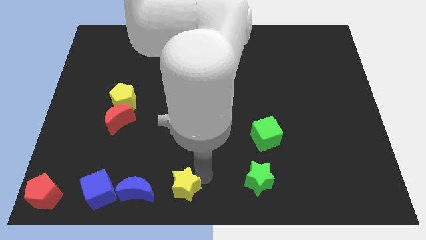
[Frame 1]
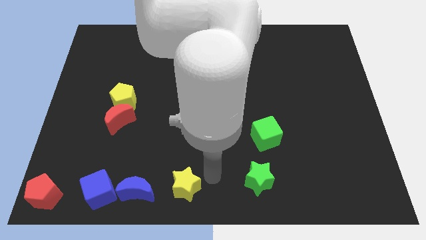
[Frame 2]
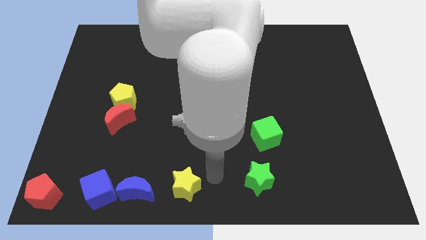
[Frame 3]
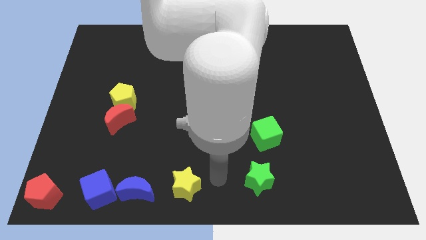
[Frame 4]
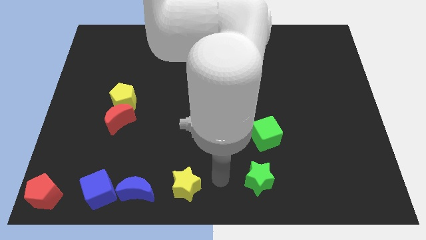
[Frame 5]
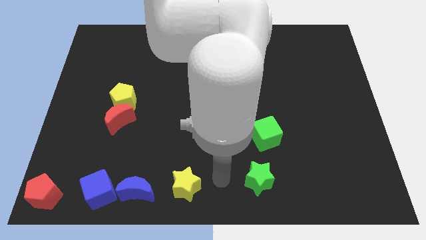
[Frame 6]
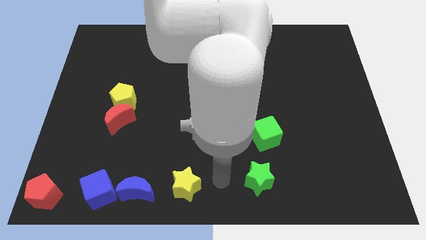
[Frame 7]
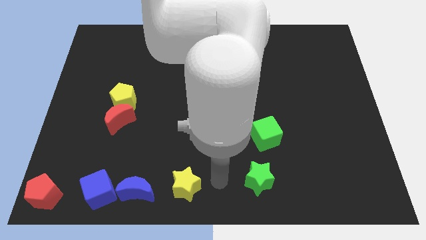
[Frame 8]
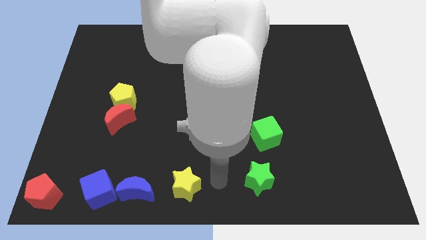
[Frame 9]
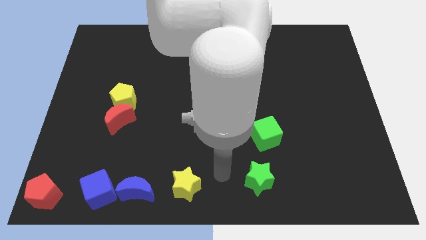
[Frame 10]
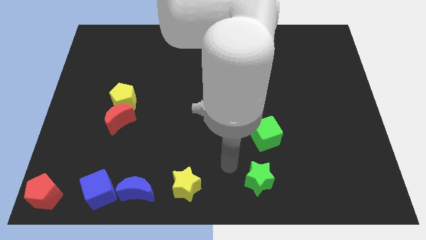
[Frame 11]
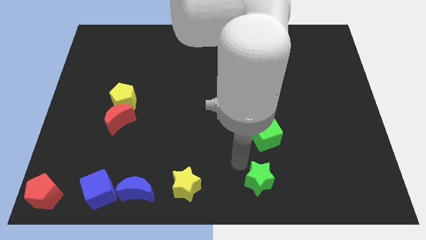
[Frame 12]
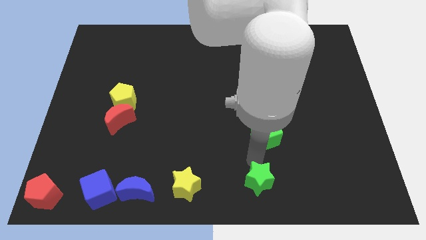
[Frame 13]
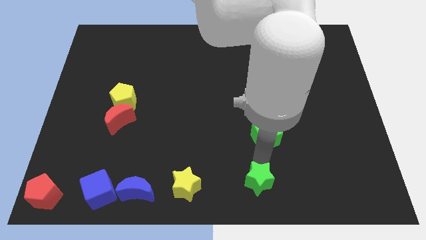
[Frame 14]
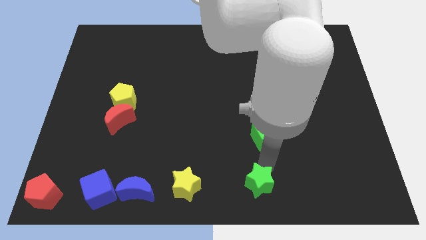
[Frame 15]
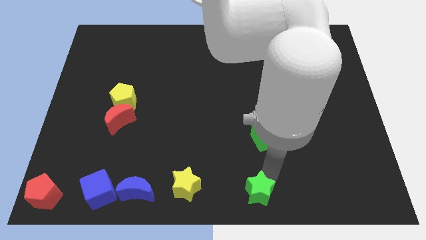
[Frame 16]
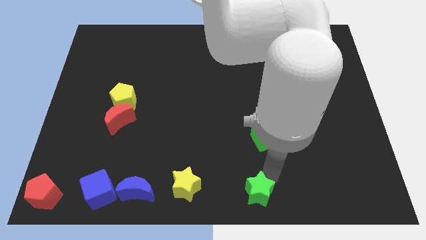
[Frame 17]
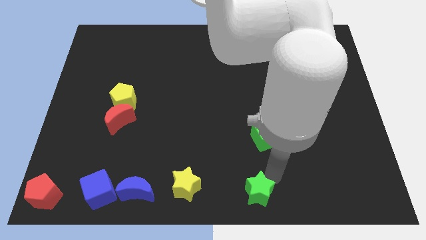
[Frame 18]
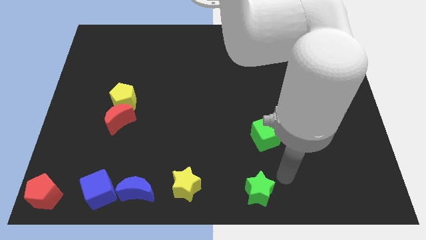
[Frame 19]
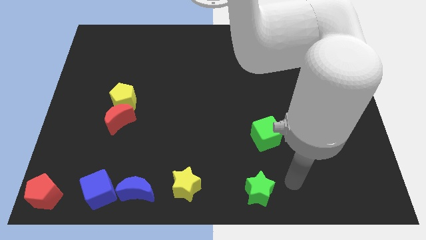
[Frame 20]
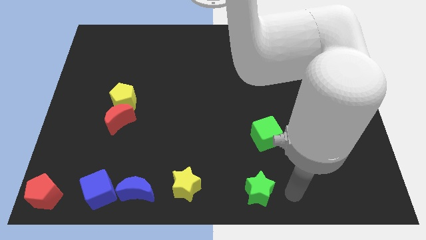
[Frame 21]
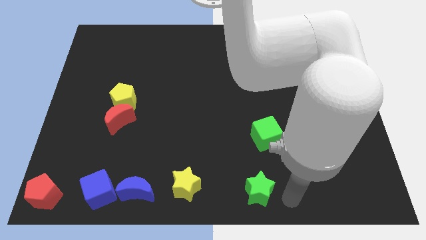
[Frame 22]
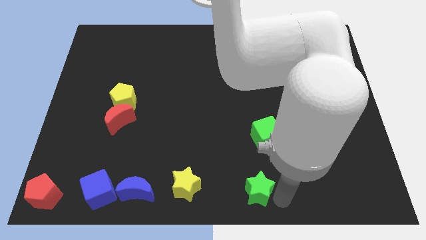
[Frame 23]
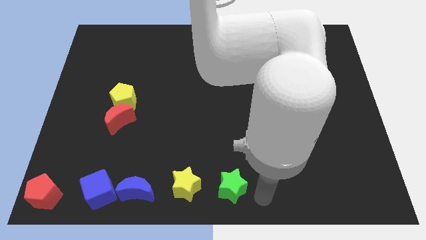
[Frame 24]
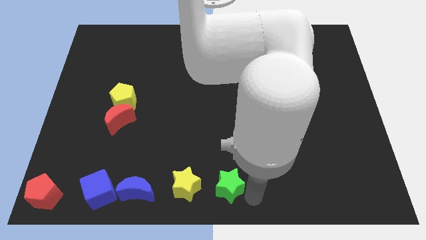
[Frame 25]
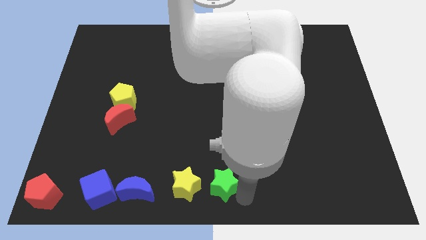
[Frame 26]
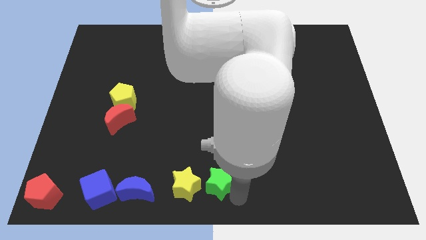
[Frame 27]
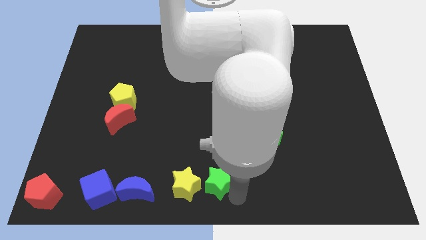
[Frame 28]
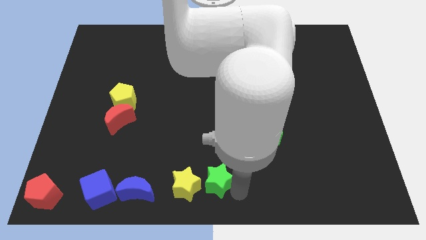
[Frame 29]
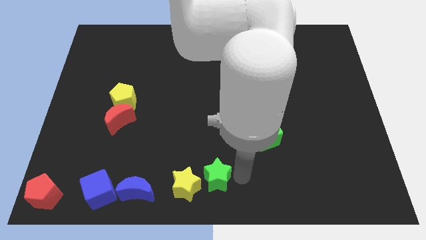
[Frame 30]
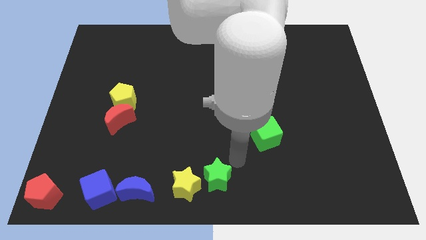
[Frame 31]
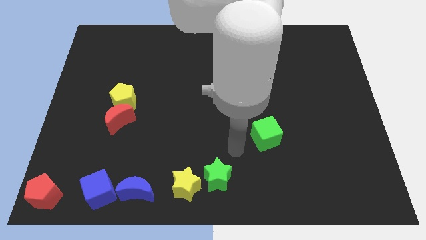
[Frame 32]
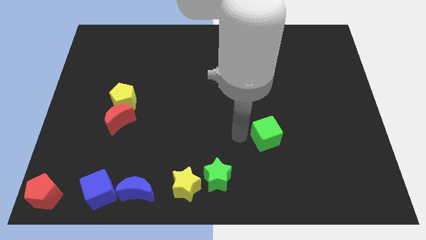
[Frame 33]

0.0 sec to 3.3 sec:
put the green star next to the yellow star

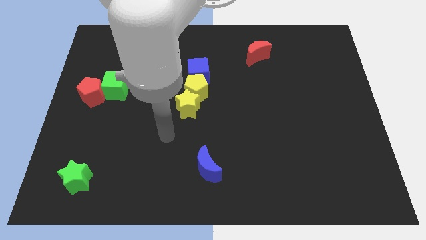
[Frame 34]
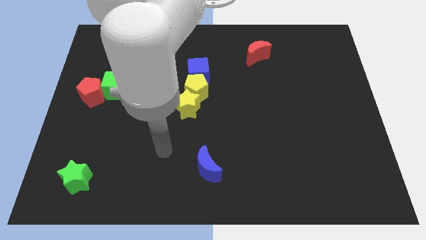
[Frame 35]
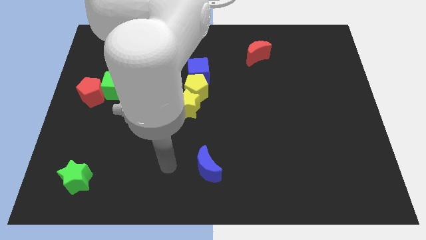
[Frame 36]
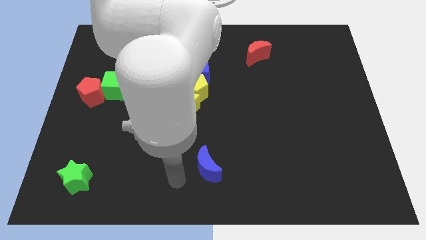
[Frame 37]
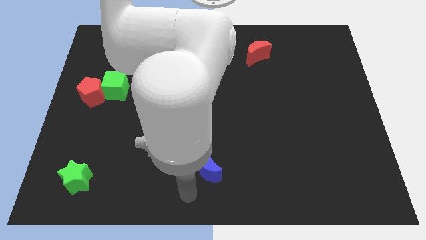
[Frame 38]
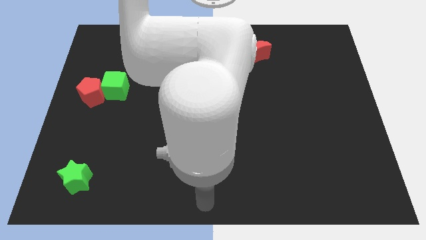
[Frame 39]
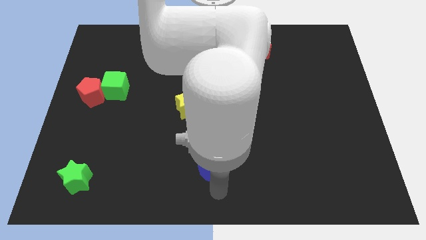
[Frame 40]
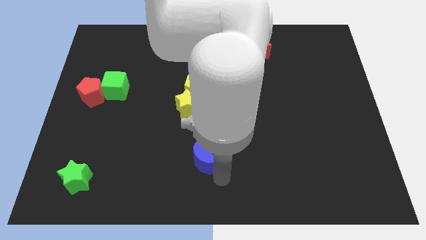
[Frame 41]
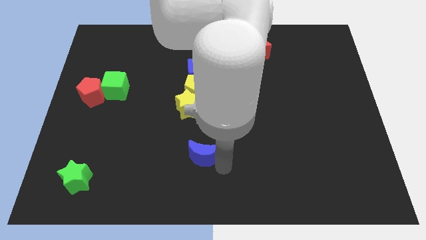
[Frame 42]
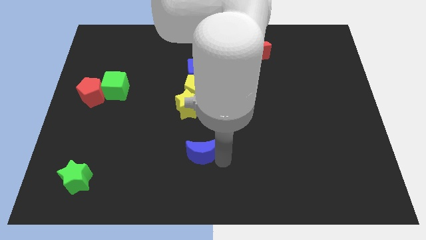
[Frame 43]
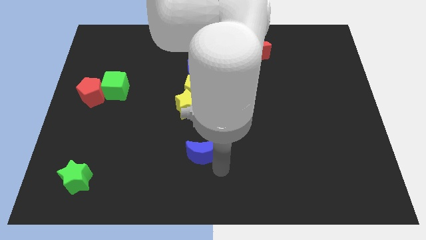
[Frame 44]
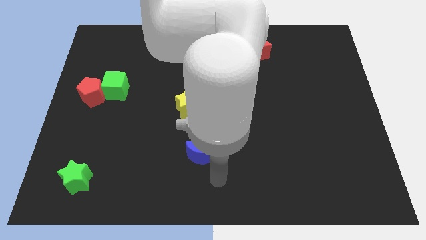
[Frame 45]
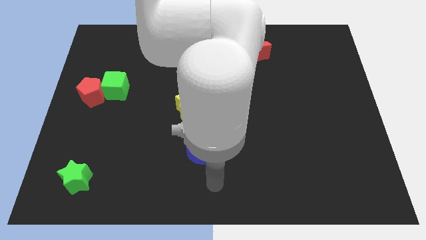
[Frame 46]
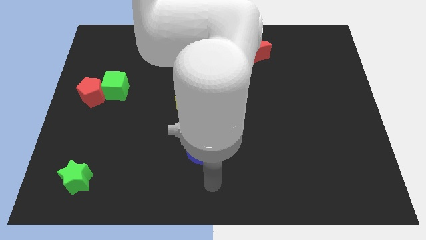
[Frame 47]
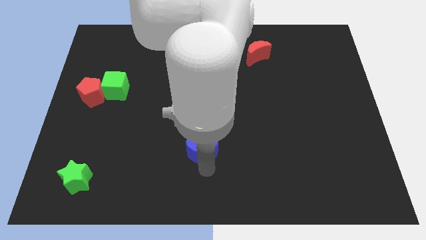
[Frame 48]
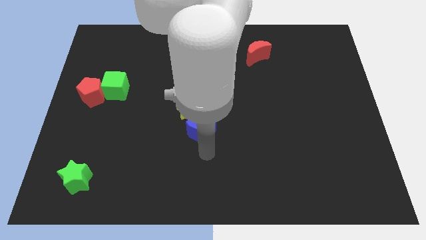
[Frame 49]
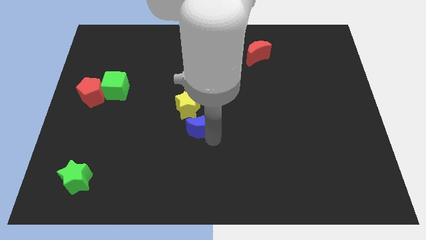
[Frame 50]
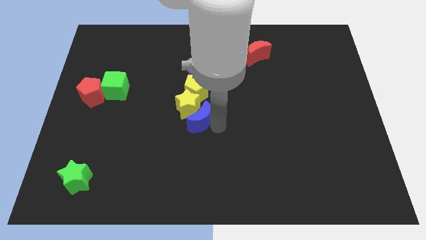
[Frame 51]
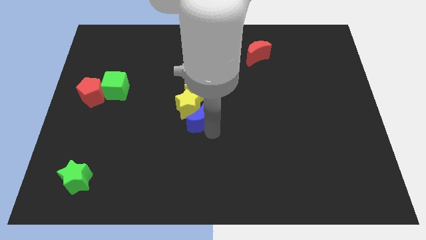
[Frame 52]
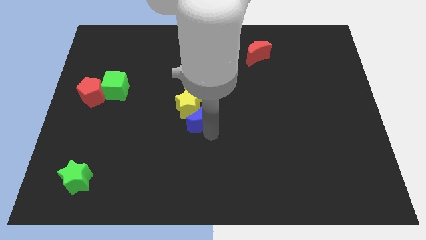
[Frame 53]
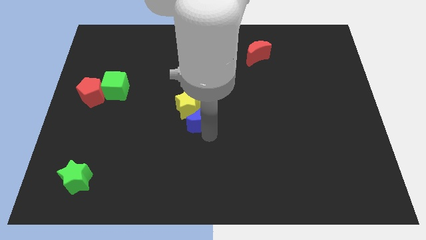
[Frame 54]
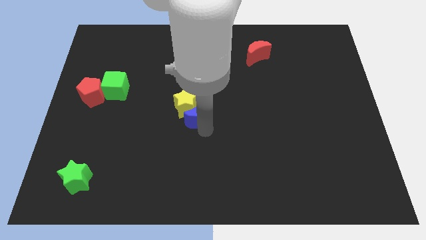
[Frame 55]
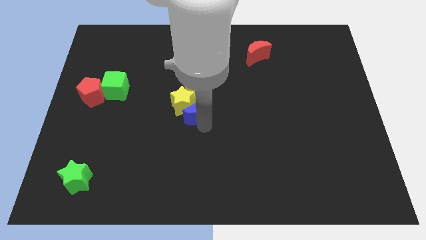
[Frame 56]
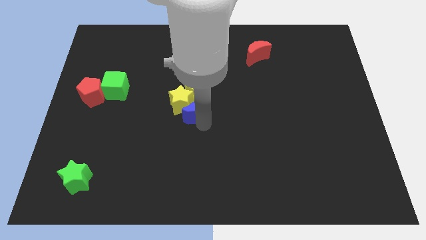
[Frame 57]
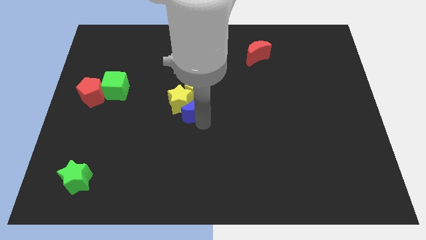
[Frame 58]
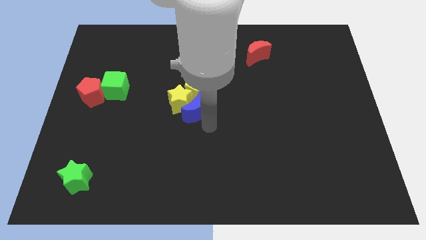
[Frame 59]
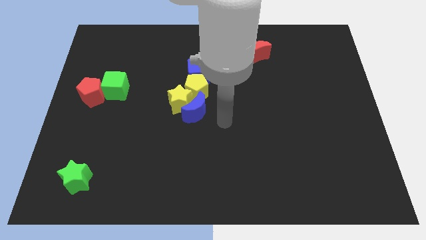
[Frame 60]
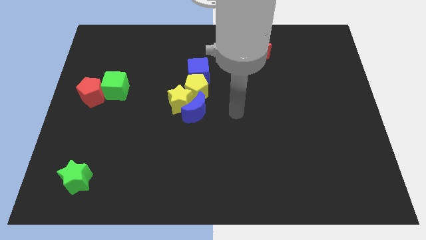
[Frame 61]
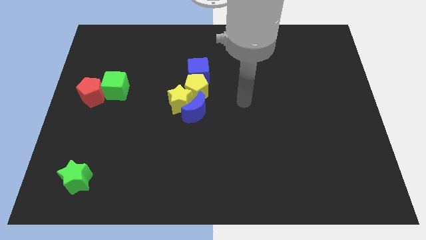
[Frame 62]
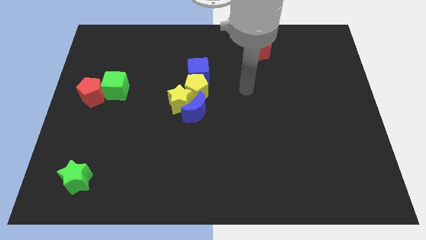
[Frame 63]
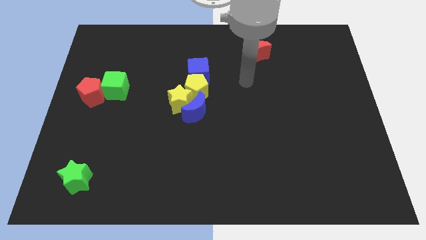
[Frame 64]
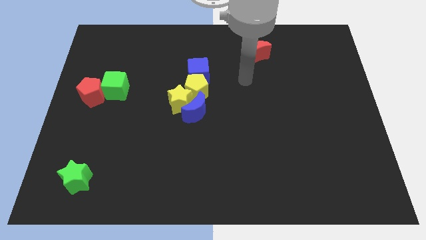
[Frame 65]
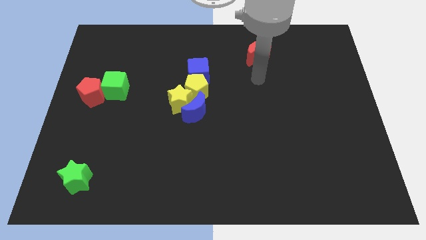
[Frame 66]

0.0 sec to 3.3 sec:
move the blue crescent to the right of the yellow star

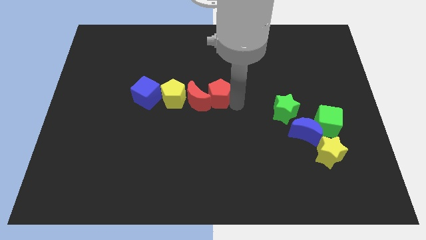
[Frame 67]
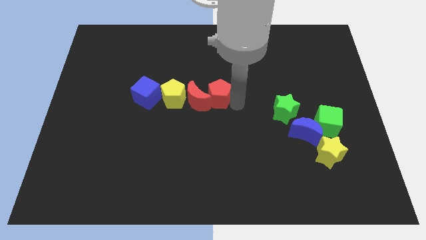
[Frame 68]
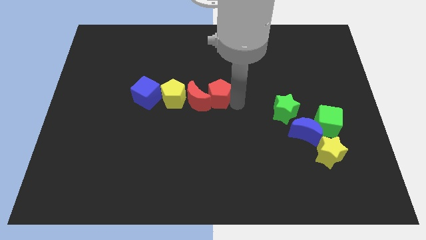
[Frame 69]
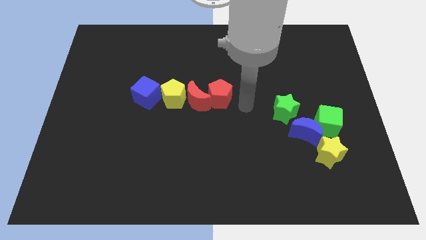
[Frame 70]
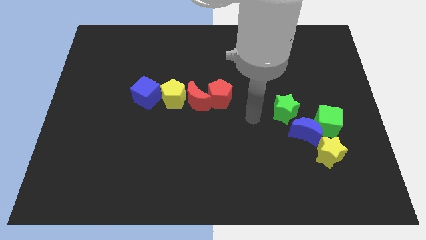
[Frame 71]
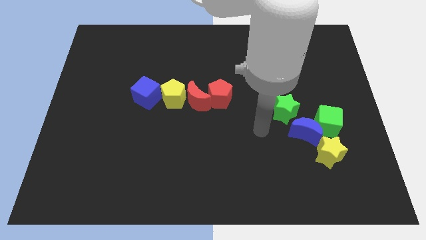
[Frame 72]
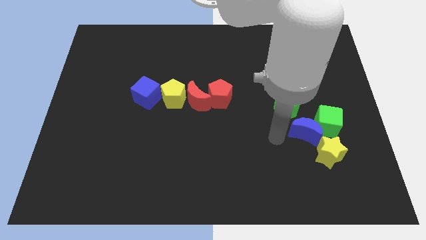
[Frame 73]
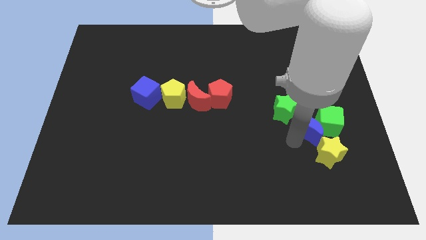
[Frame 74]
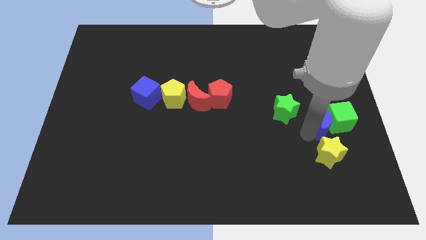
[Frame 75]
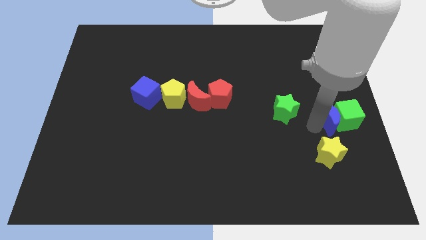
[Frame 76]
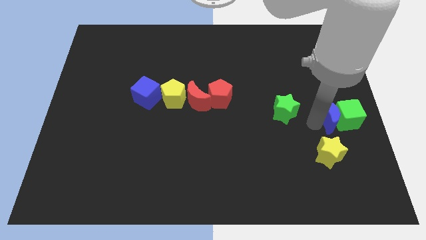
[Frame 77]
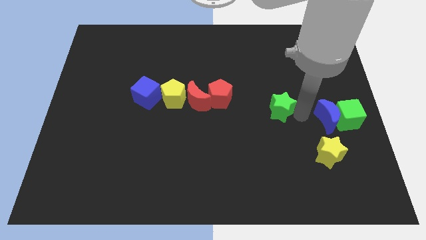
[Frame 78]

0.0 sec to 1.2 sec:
push the blue crescent into the green cube

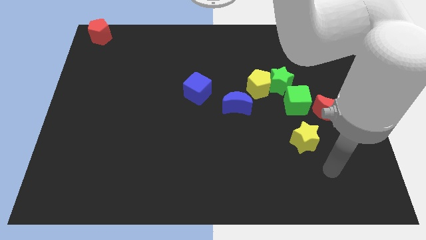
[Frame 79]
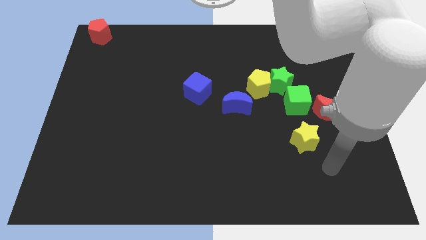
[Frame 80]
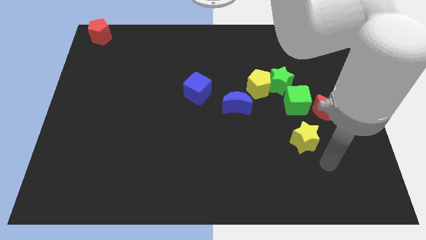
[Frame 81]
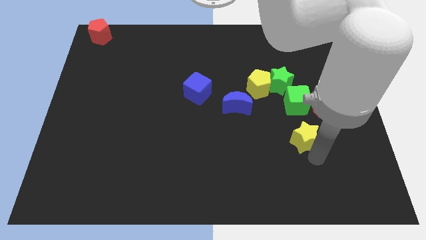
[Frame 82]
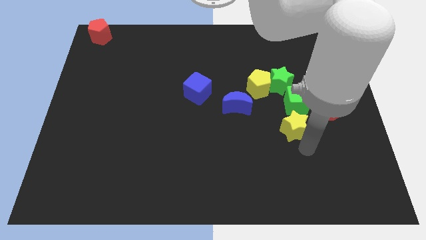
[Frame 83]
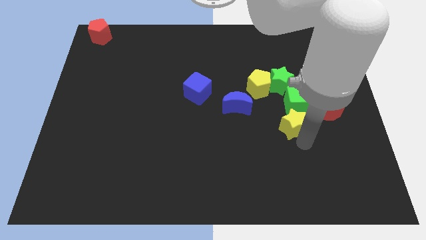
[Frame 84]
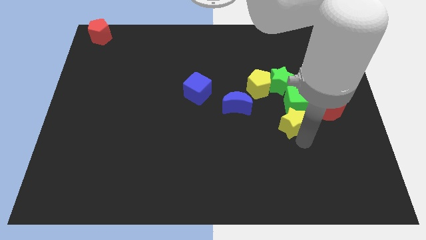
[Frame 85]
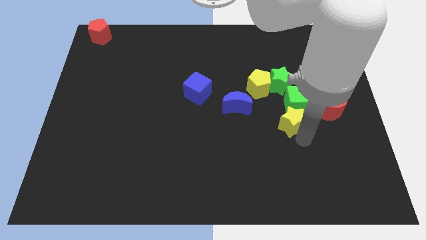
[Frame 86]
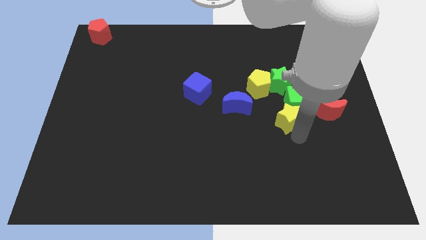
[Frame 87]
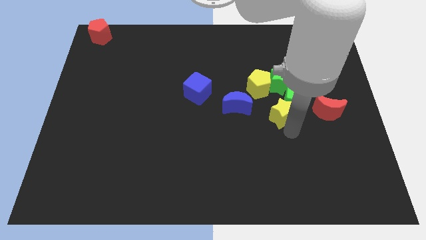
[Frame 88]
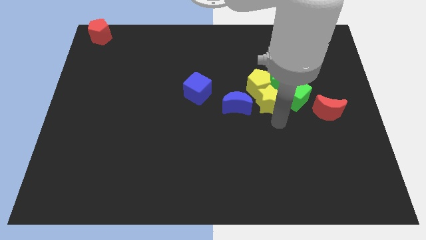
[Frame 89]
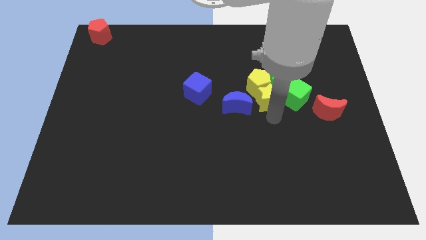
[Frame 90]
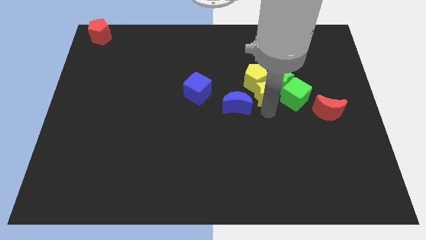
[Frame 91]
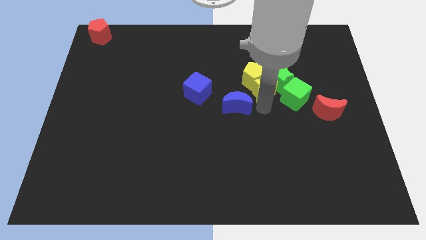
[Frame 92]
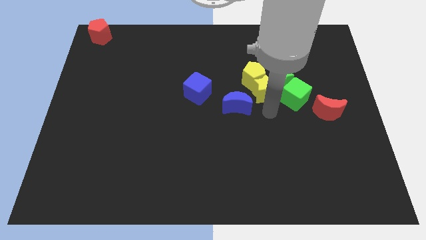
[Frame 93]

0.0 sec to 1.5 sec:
push the yellow star into the yellow pentagon
